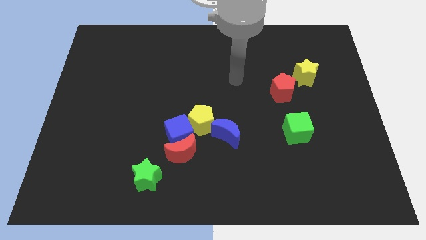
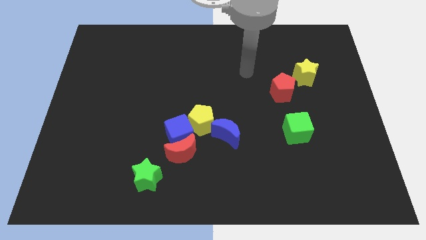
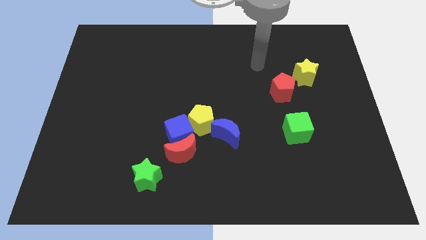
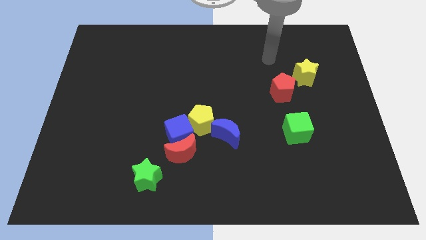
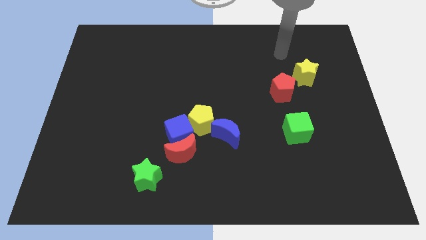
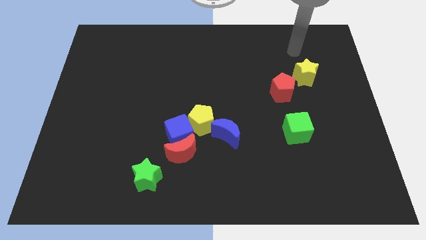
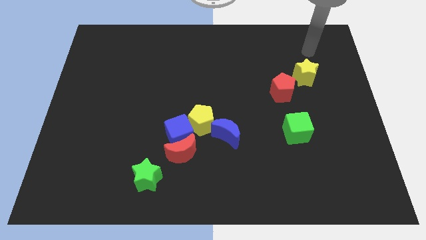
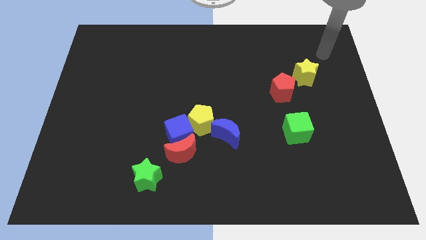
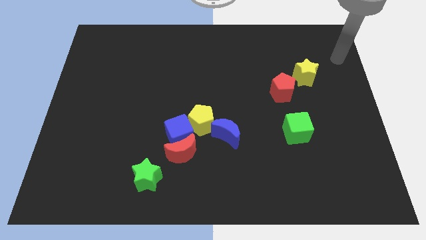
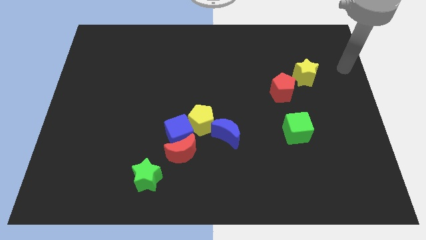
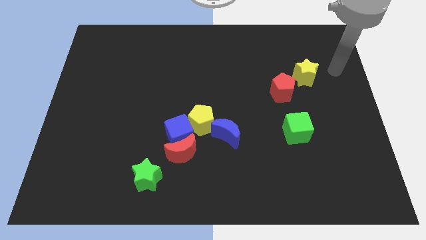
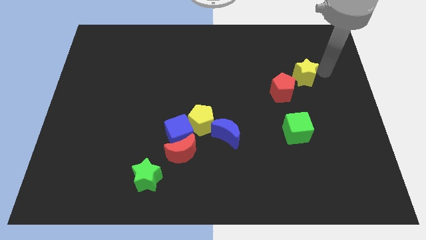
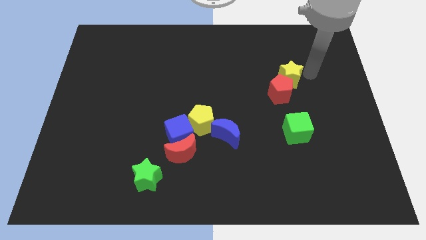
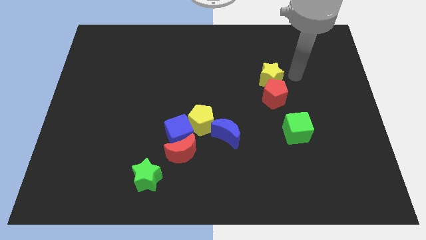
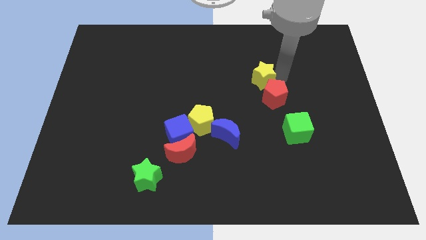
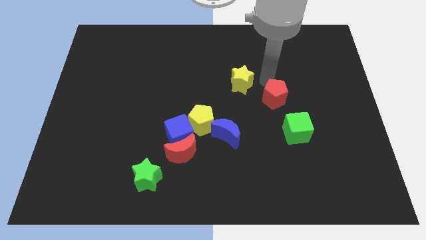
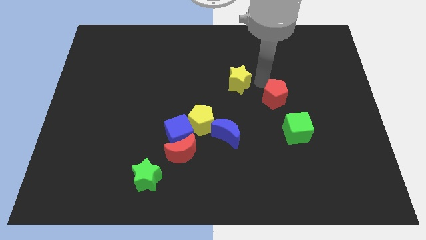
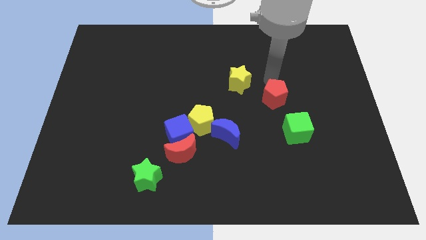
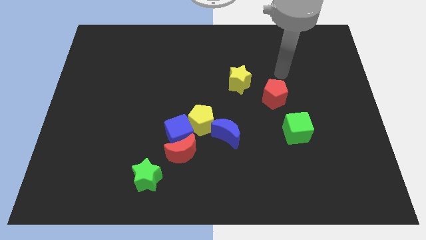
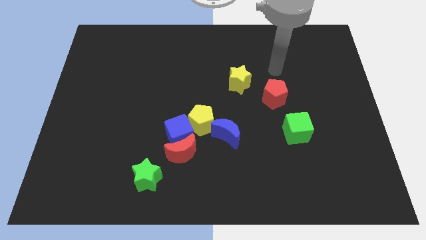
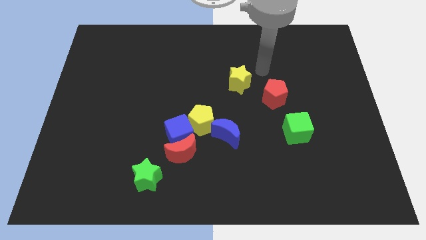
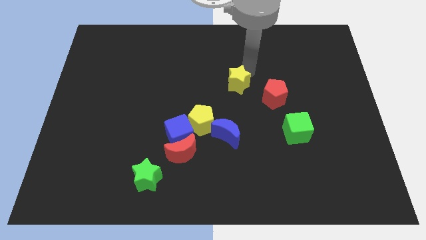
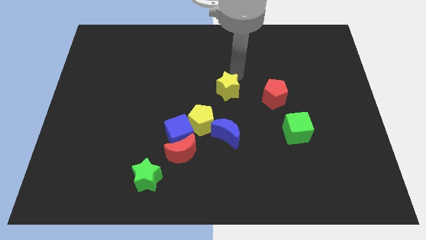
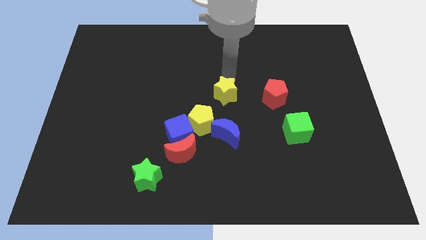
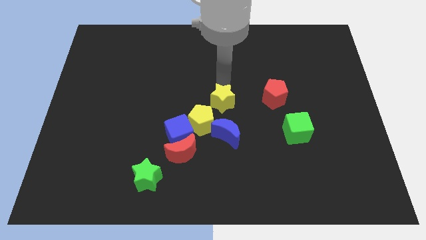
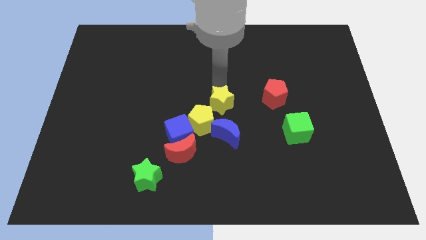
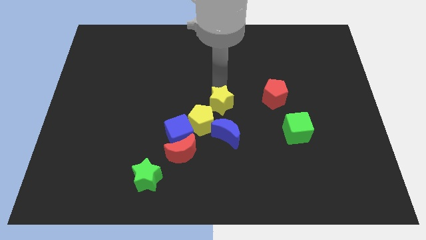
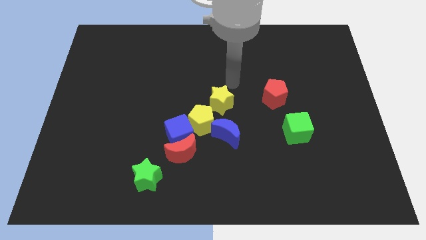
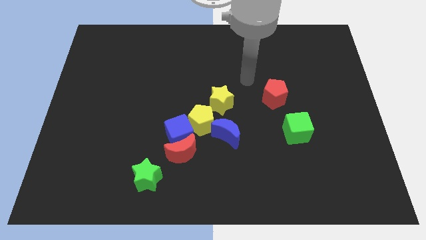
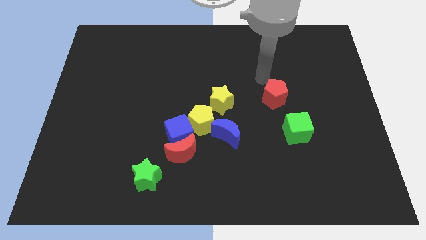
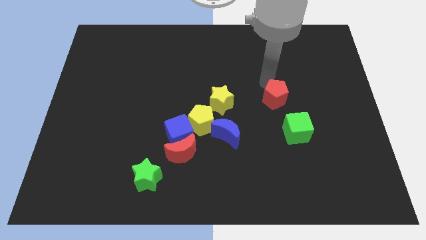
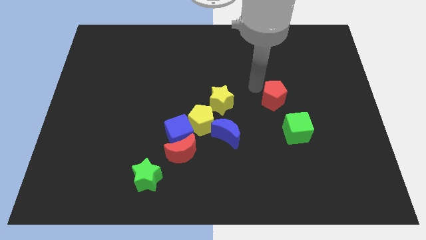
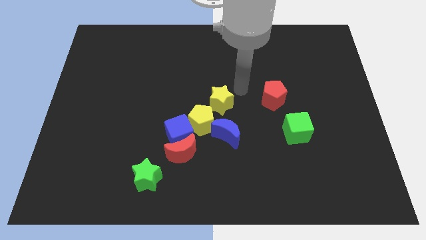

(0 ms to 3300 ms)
move the yellow star to the center of the board

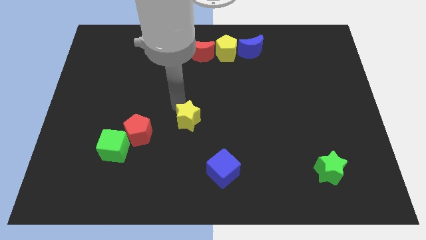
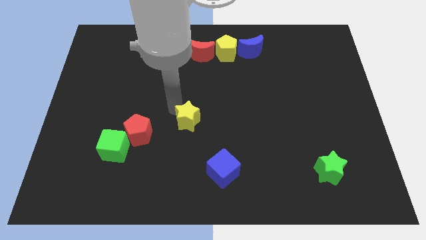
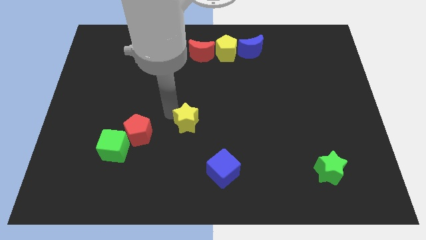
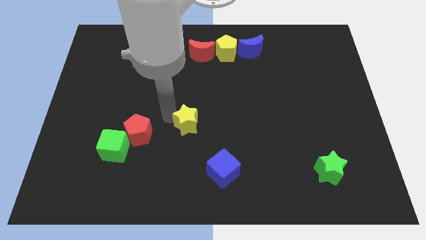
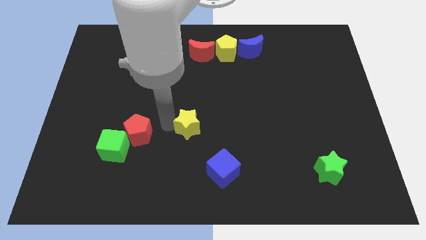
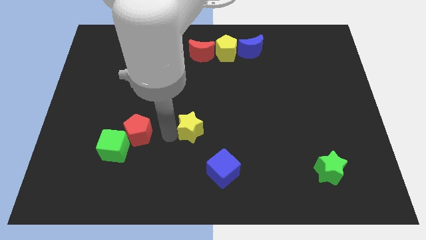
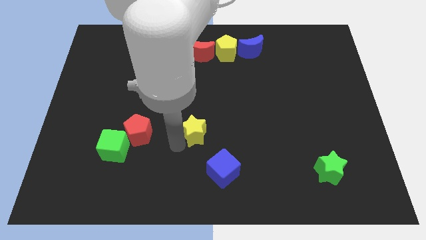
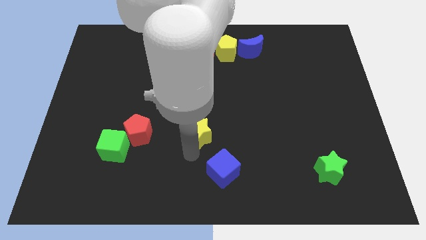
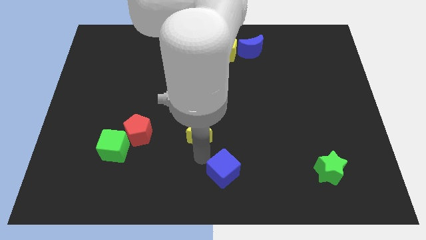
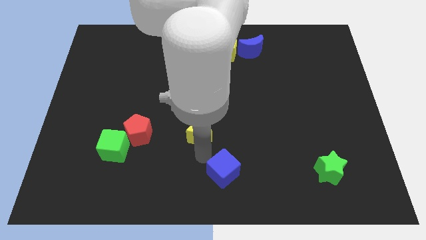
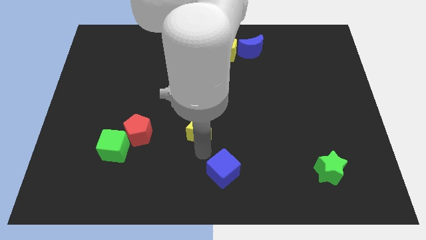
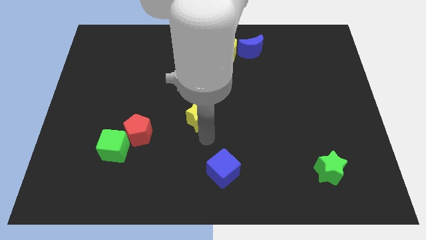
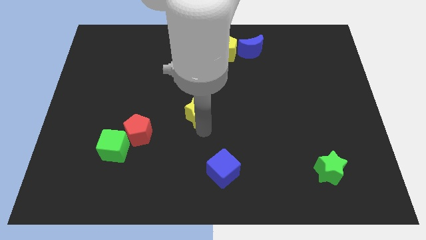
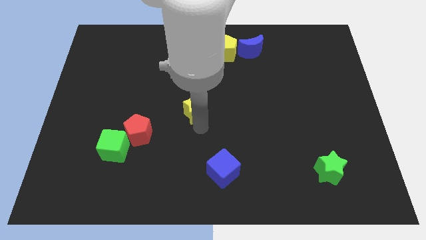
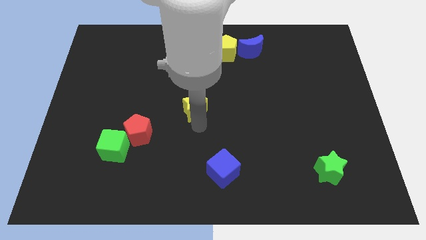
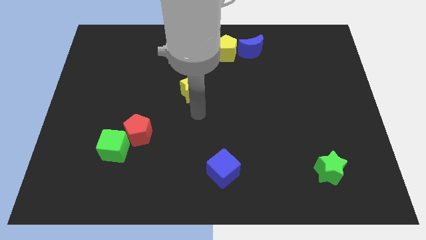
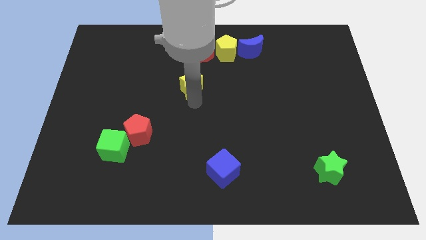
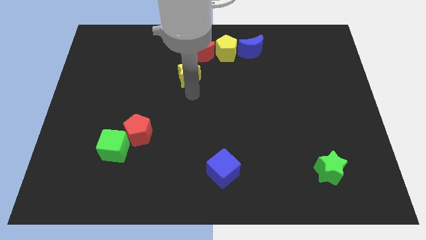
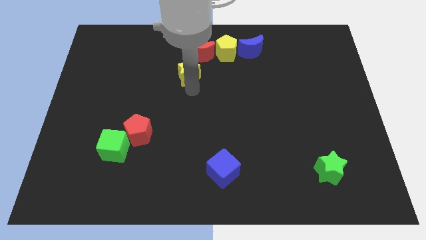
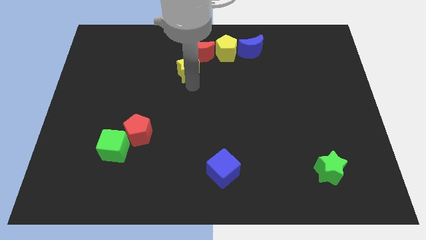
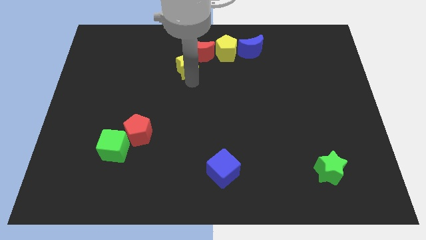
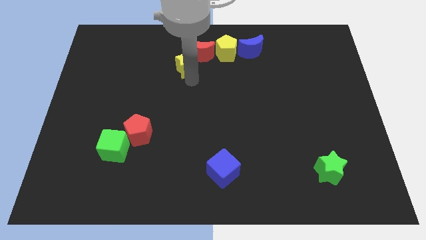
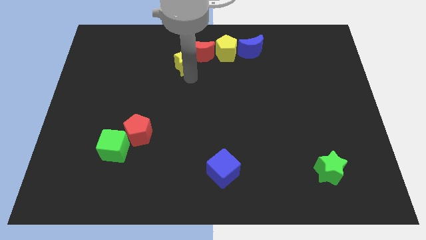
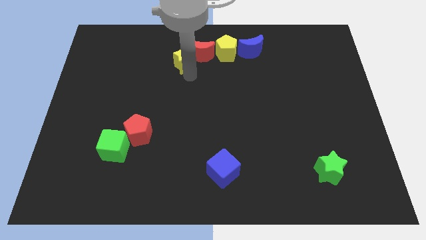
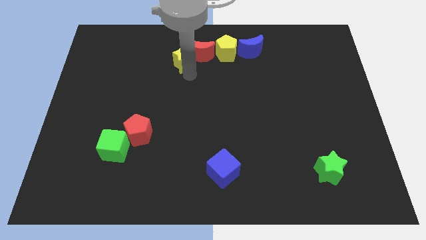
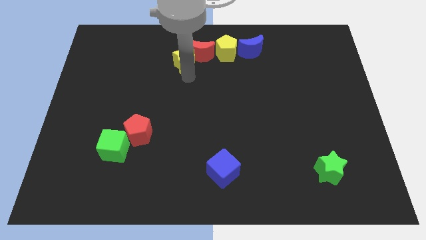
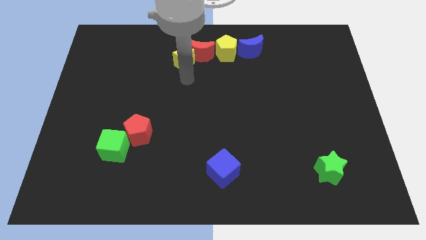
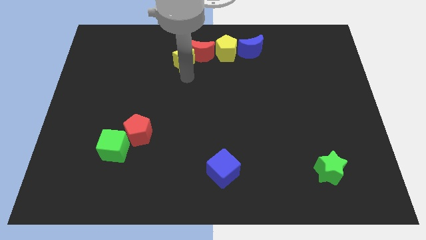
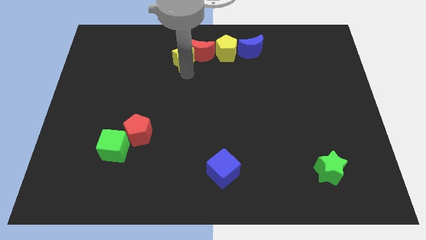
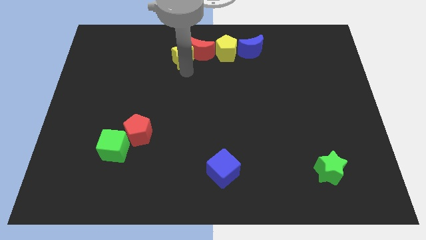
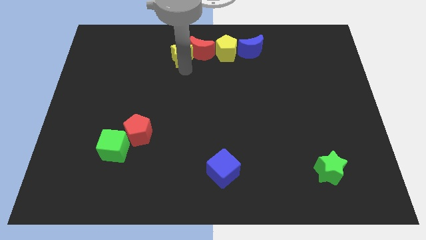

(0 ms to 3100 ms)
move the yellow star at the bottom of red moon

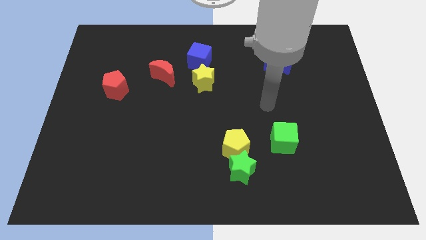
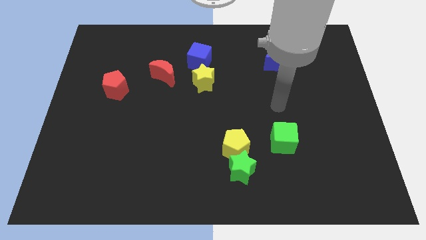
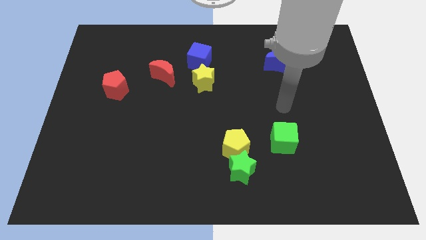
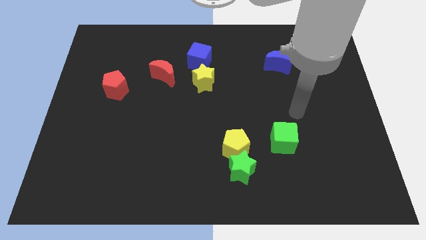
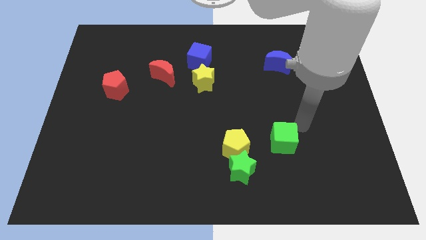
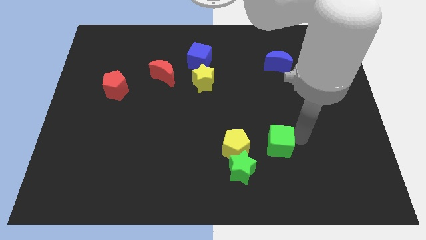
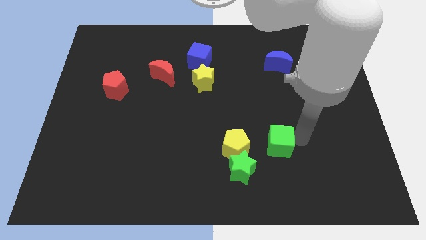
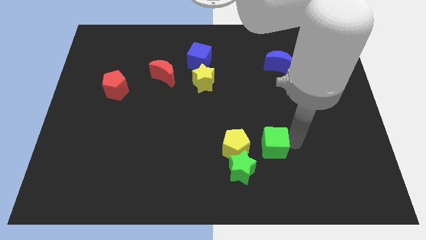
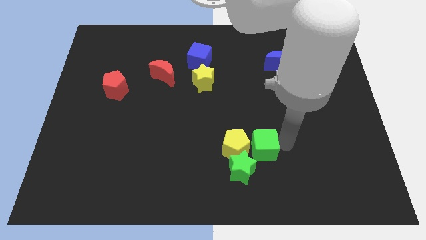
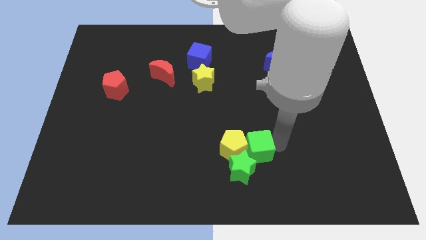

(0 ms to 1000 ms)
place the green cube to the right side of yellow pentagon

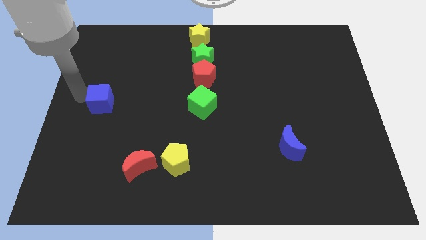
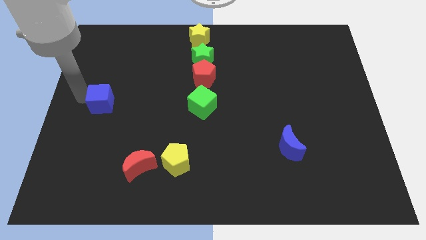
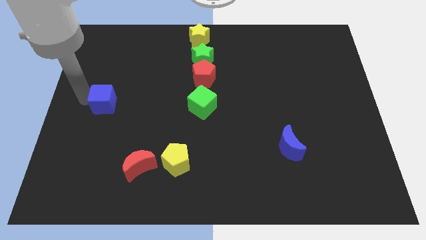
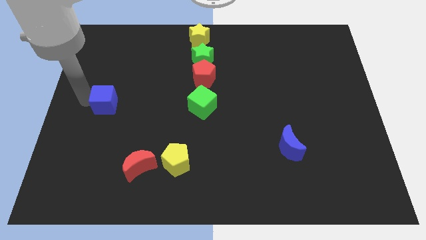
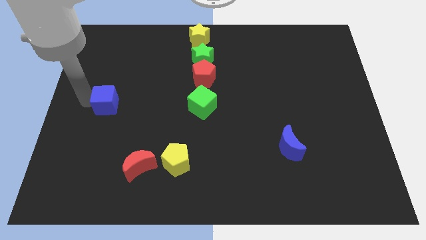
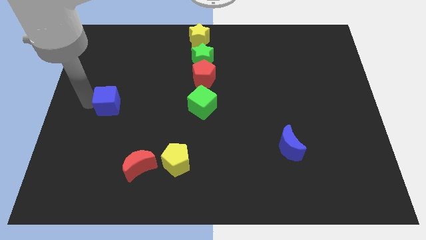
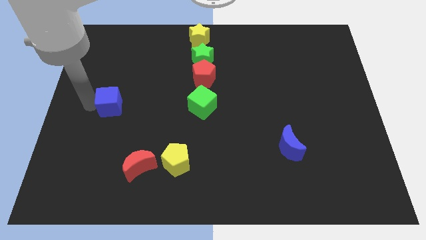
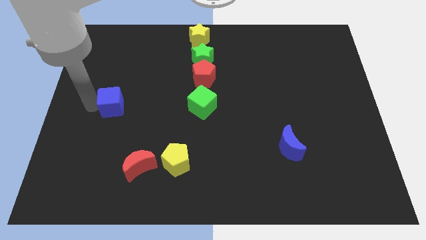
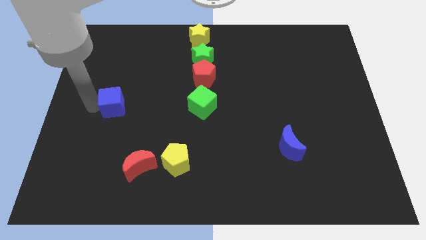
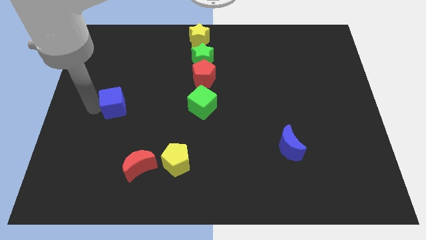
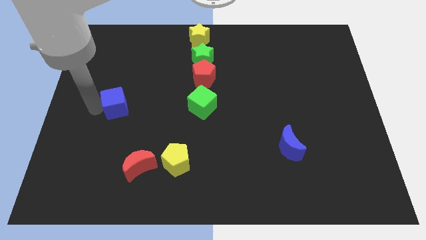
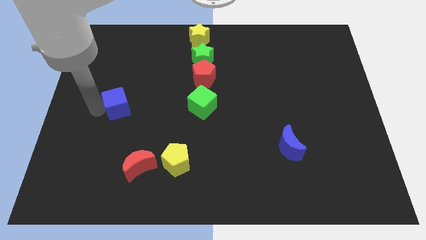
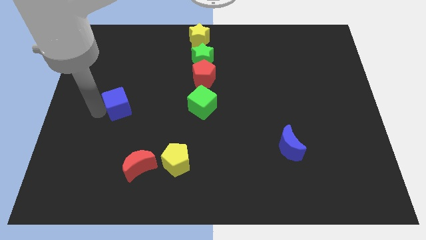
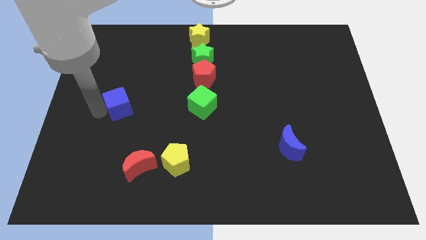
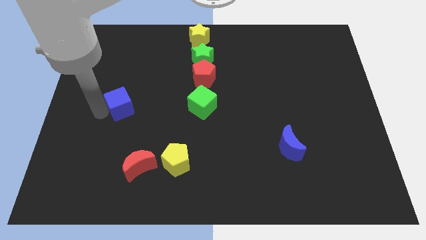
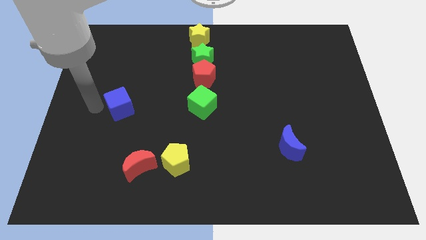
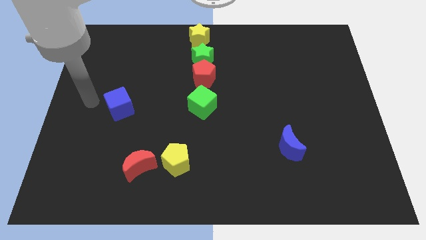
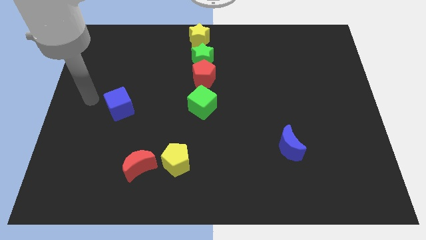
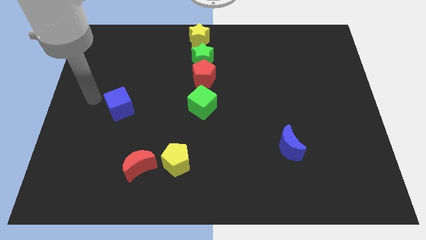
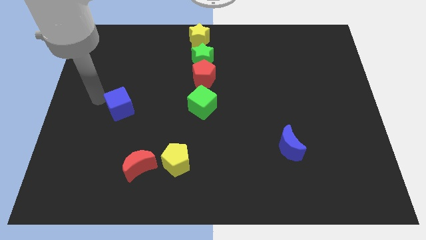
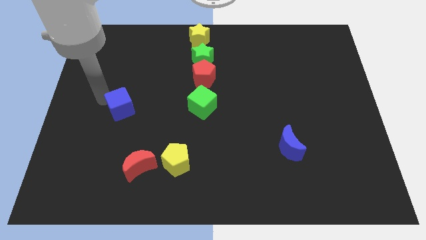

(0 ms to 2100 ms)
place the blue cube parallel to green cube
